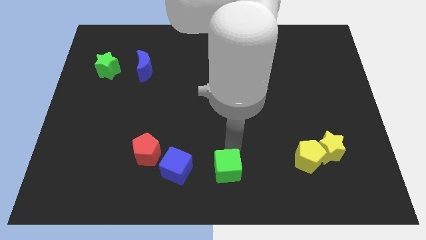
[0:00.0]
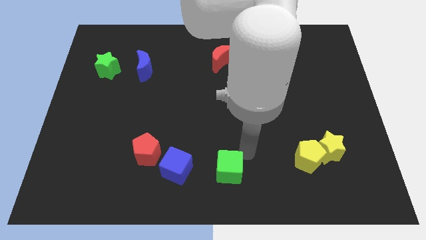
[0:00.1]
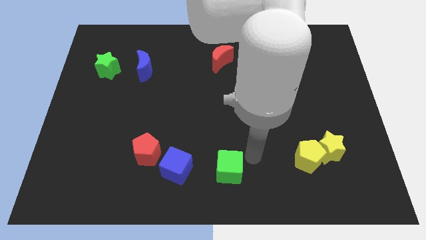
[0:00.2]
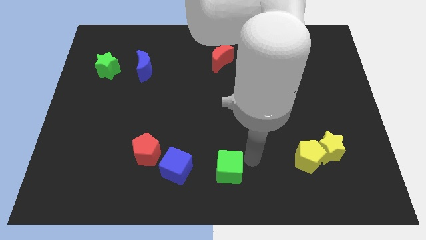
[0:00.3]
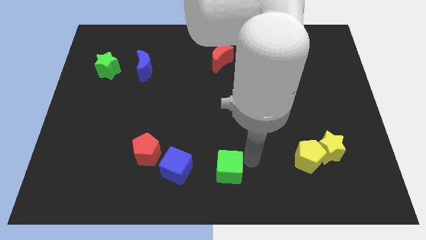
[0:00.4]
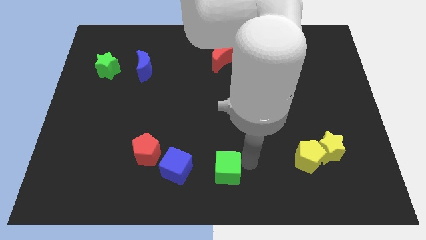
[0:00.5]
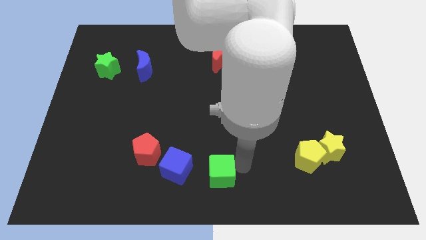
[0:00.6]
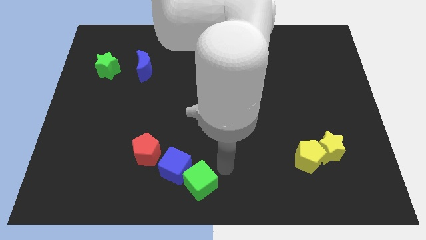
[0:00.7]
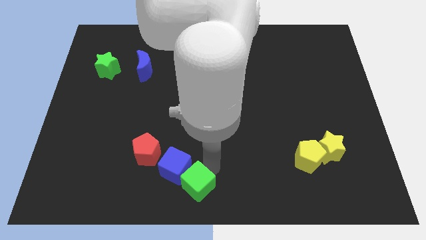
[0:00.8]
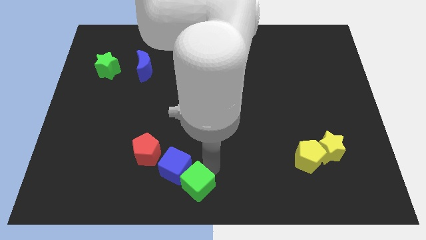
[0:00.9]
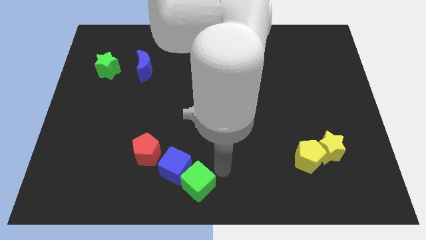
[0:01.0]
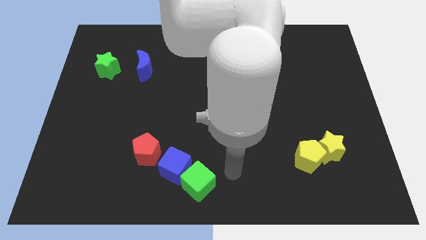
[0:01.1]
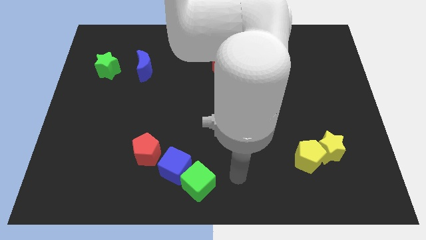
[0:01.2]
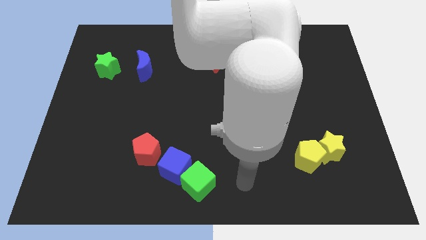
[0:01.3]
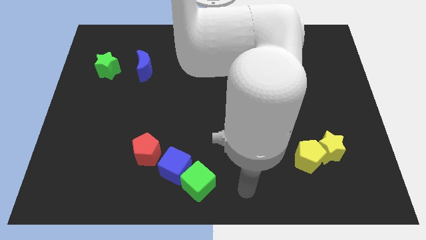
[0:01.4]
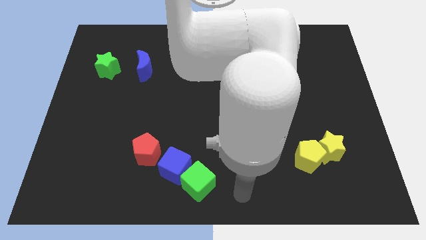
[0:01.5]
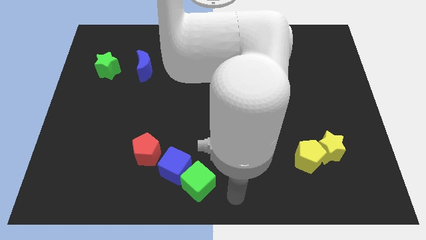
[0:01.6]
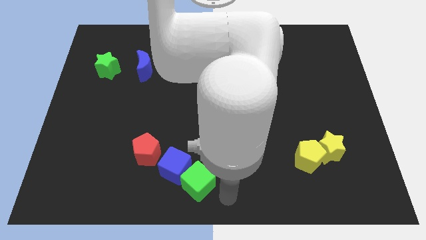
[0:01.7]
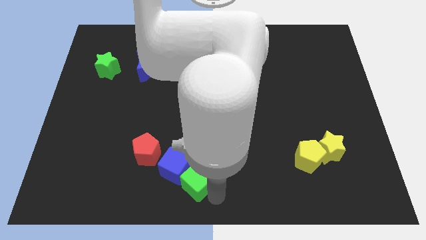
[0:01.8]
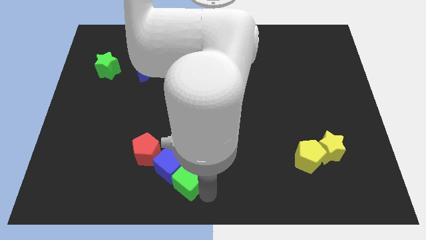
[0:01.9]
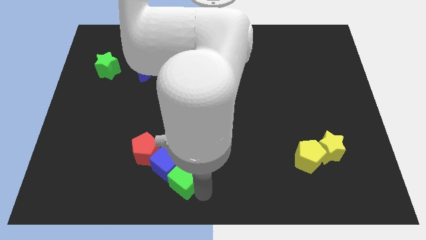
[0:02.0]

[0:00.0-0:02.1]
slide the green cube to the bottom right side of the blue cube

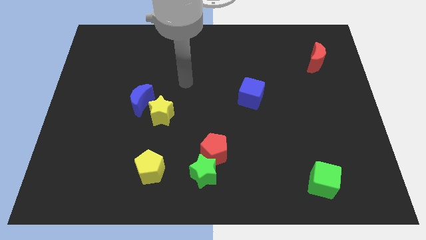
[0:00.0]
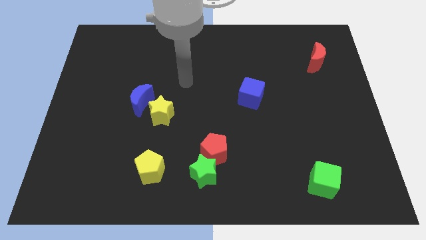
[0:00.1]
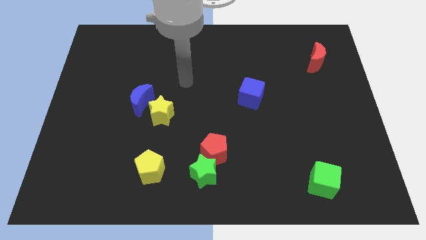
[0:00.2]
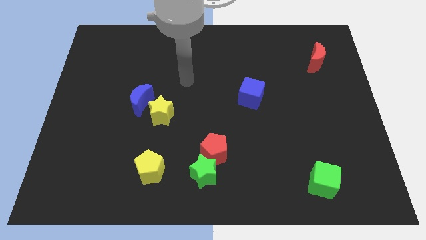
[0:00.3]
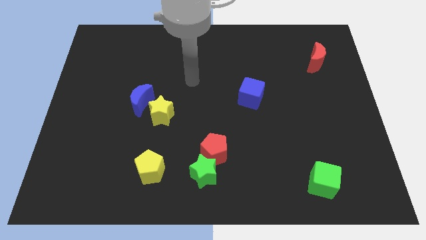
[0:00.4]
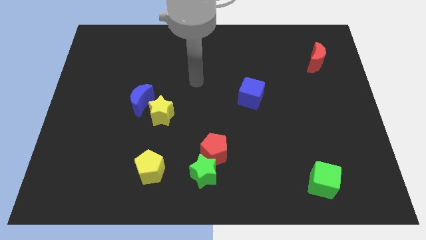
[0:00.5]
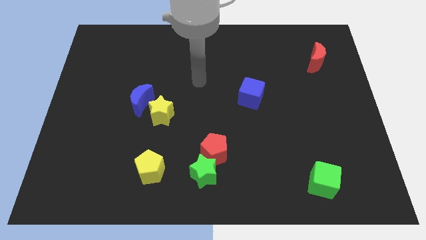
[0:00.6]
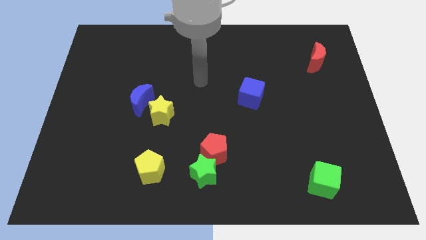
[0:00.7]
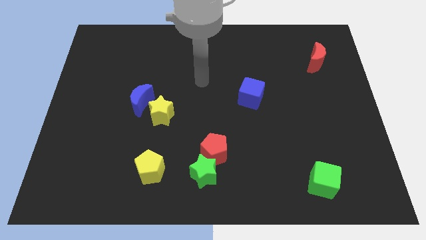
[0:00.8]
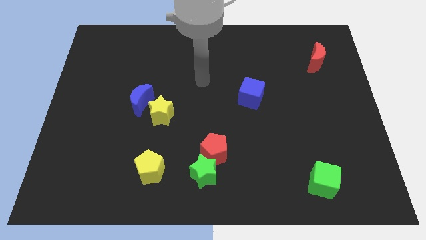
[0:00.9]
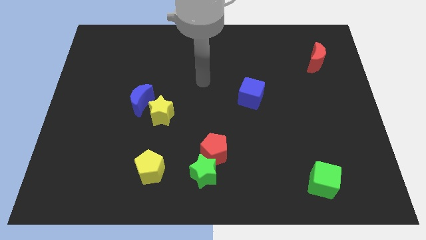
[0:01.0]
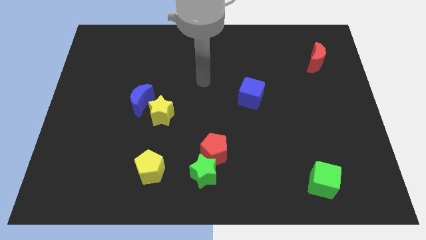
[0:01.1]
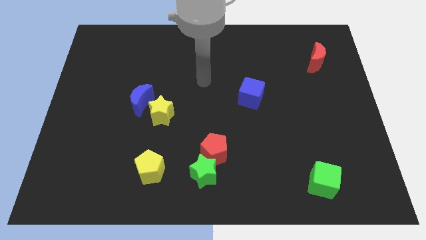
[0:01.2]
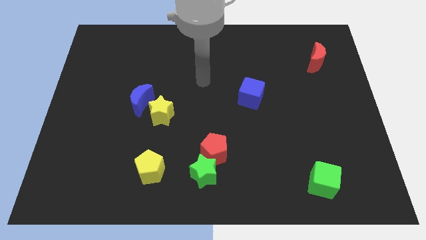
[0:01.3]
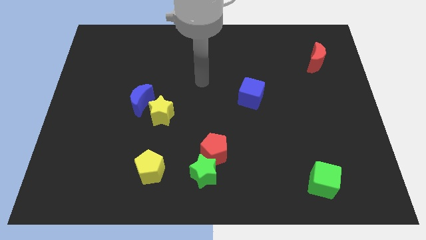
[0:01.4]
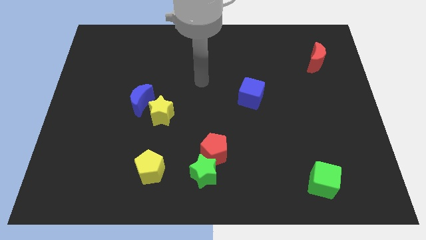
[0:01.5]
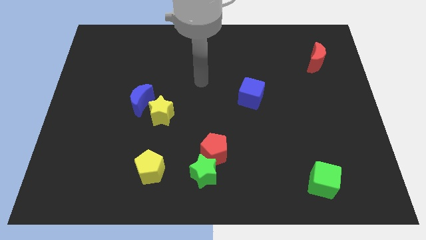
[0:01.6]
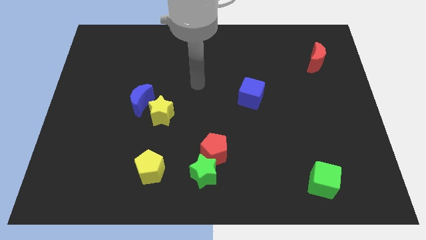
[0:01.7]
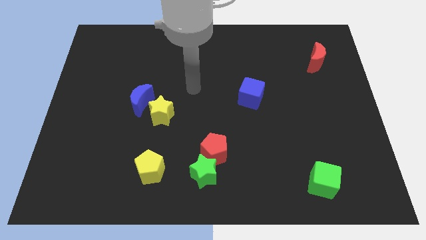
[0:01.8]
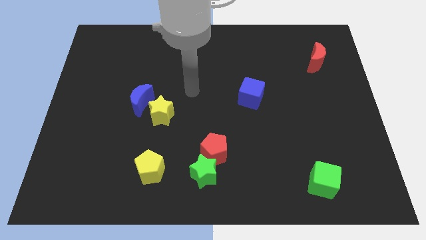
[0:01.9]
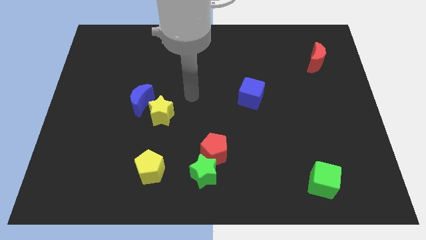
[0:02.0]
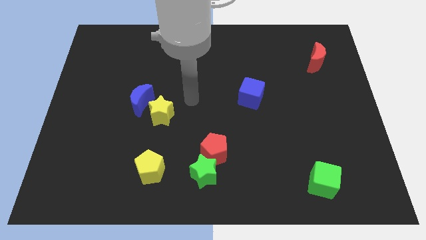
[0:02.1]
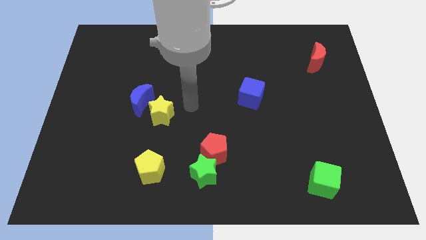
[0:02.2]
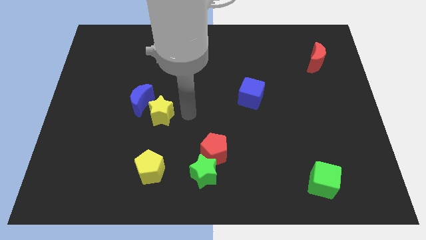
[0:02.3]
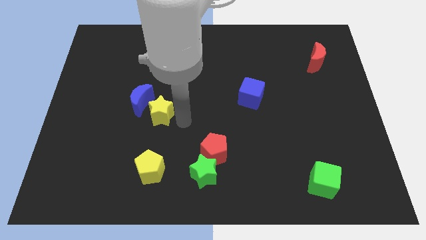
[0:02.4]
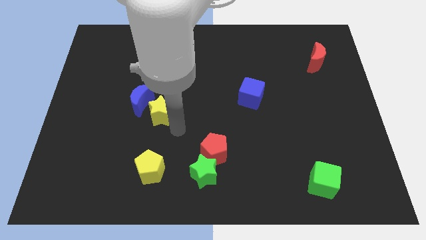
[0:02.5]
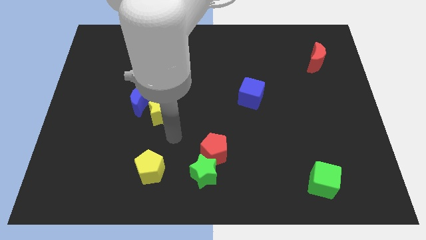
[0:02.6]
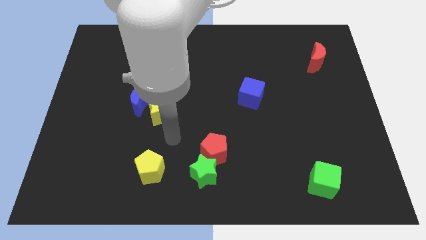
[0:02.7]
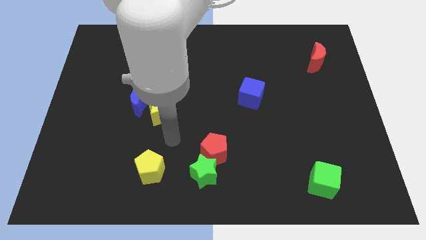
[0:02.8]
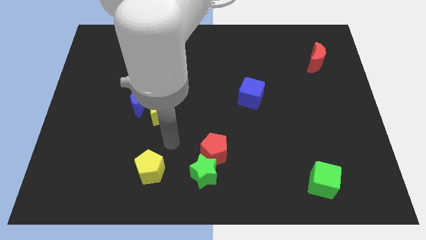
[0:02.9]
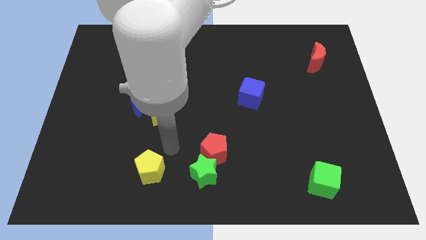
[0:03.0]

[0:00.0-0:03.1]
point your arm at the top right side of the yellow pentagon

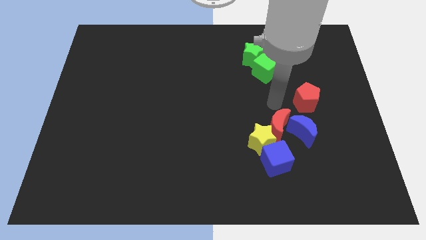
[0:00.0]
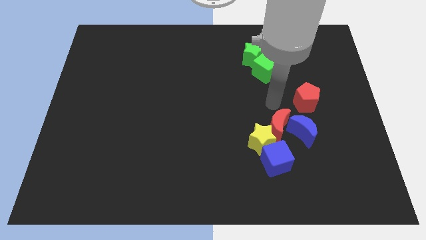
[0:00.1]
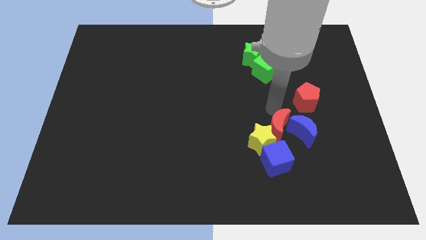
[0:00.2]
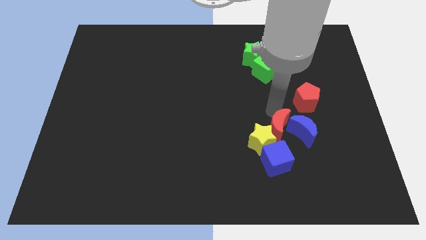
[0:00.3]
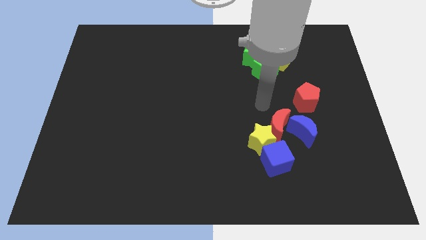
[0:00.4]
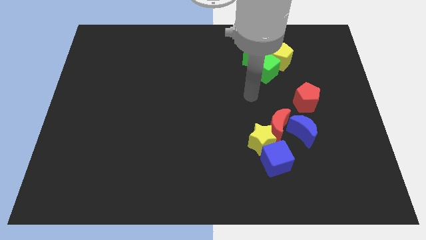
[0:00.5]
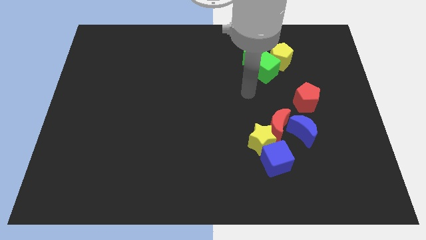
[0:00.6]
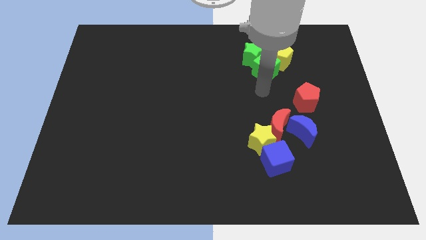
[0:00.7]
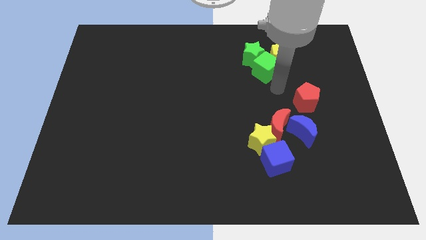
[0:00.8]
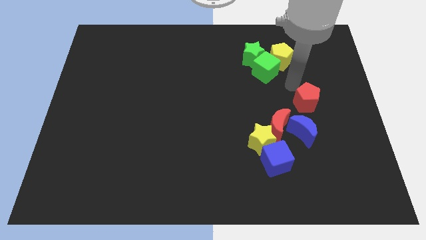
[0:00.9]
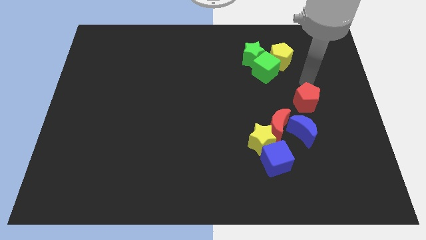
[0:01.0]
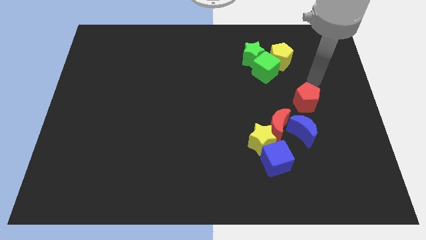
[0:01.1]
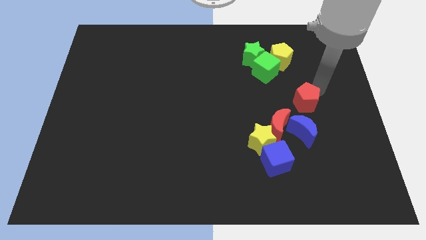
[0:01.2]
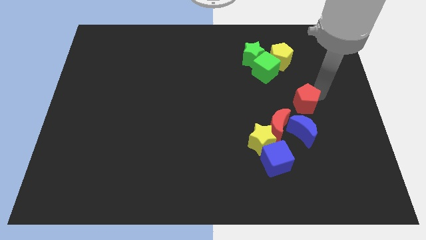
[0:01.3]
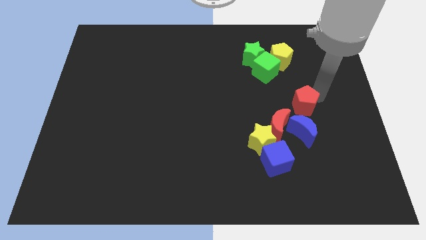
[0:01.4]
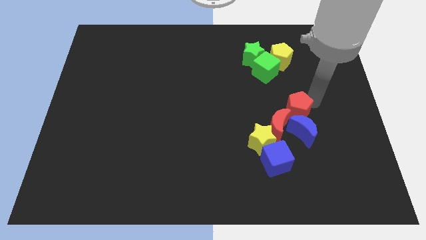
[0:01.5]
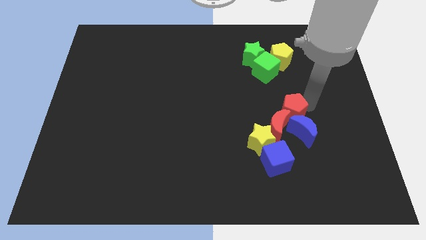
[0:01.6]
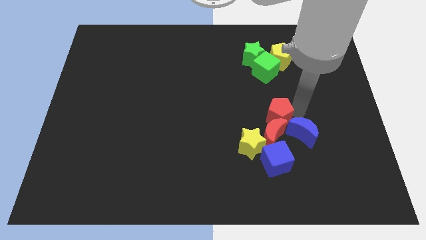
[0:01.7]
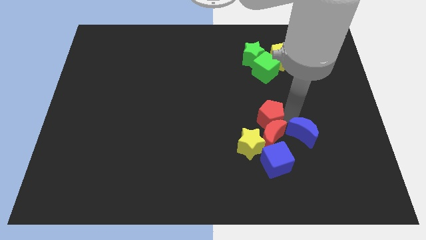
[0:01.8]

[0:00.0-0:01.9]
push the red pentagon into the red crescent

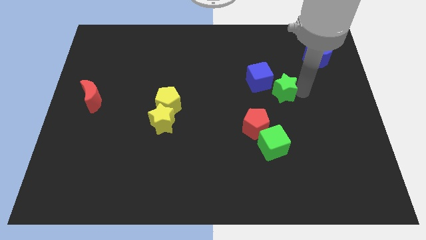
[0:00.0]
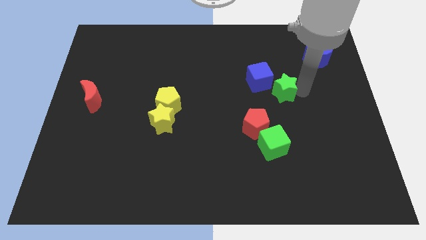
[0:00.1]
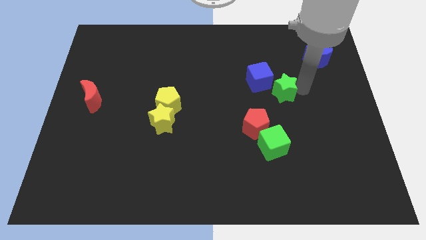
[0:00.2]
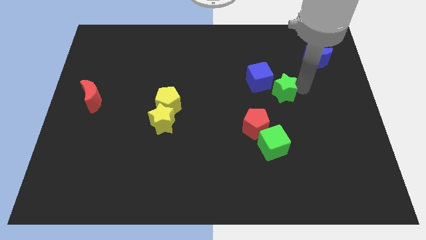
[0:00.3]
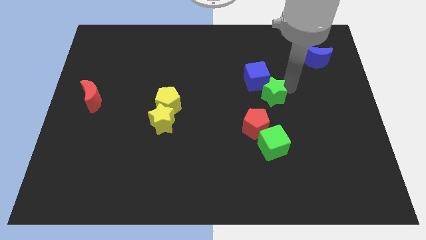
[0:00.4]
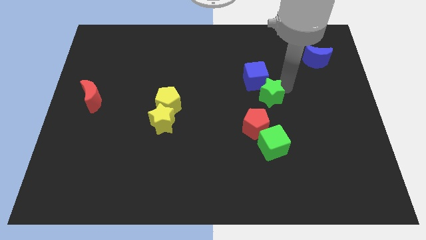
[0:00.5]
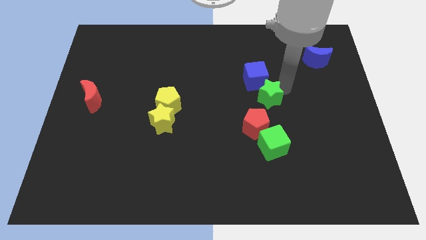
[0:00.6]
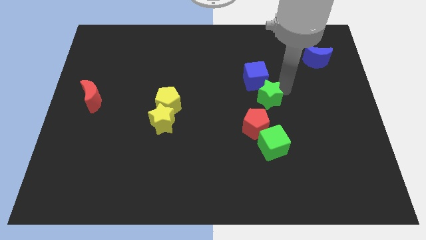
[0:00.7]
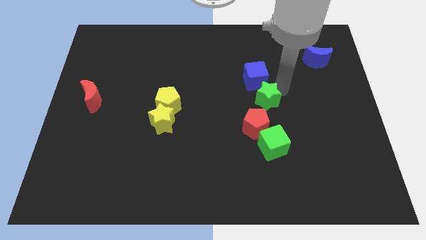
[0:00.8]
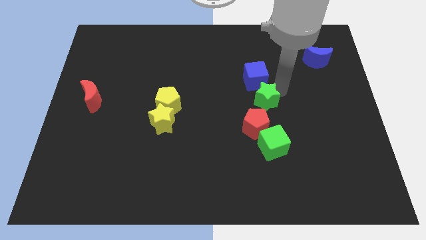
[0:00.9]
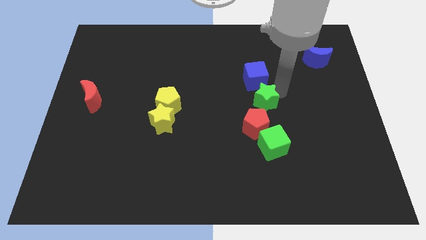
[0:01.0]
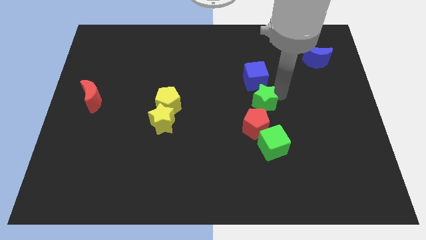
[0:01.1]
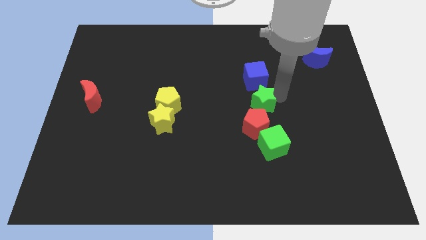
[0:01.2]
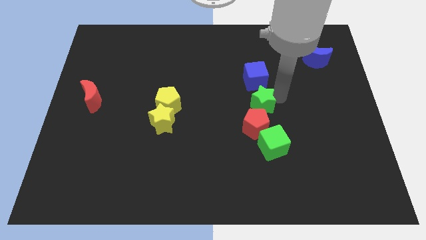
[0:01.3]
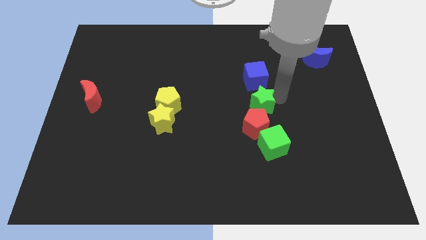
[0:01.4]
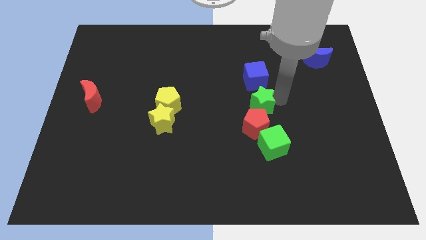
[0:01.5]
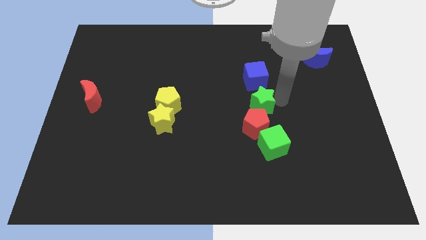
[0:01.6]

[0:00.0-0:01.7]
place the green star diagonally right to the red pentagon

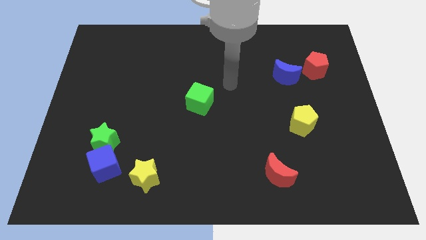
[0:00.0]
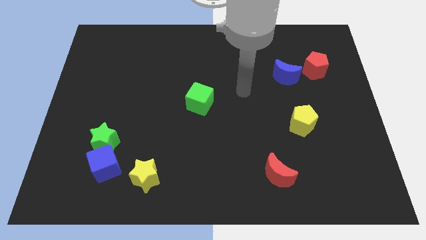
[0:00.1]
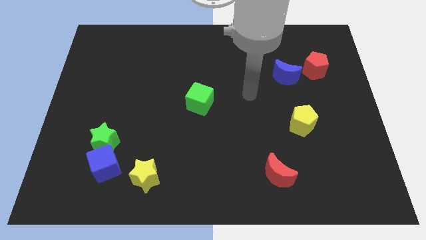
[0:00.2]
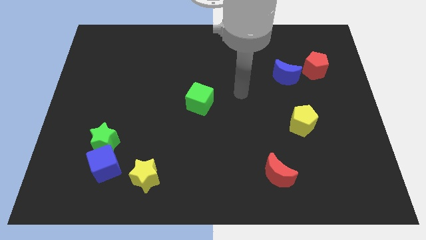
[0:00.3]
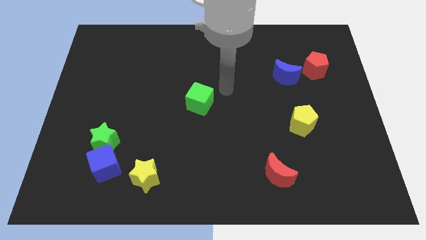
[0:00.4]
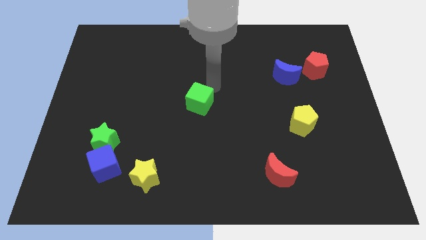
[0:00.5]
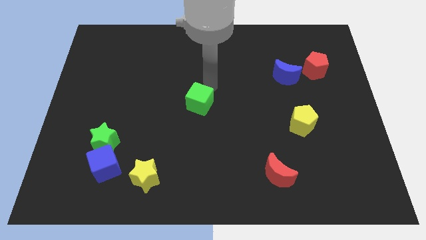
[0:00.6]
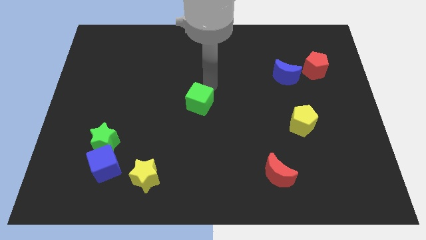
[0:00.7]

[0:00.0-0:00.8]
move arm above green cube
